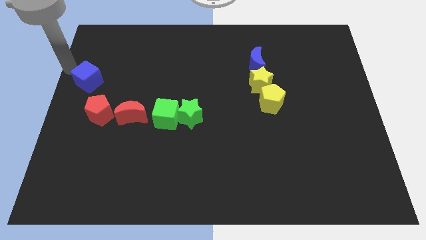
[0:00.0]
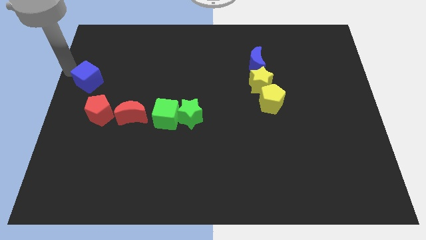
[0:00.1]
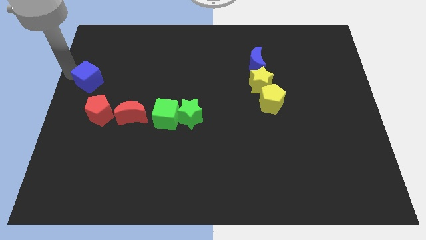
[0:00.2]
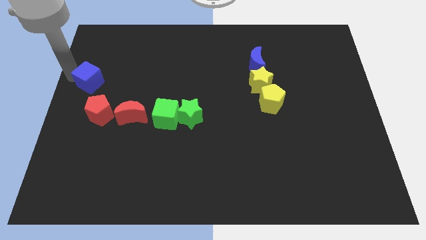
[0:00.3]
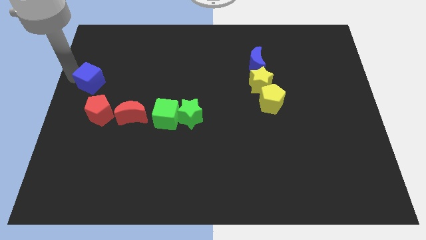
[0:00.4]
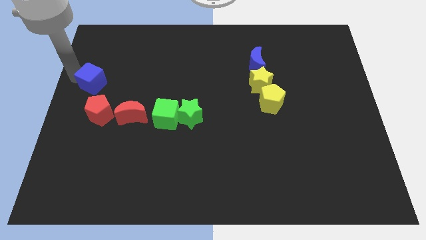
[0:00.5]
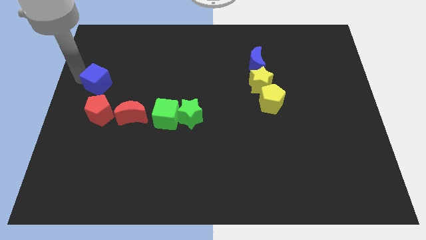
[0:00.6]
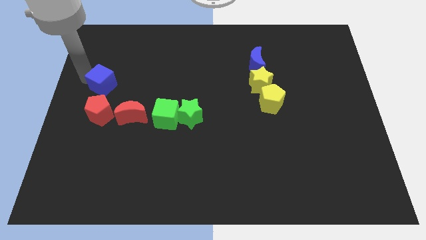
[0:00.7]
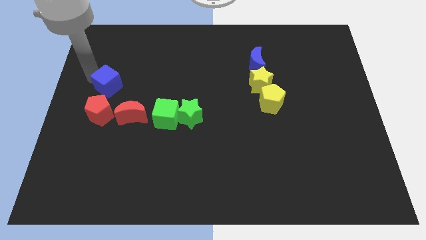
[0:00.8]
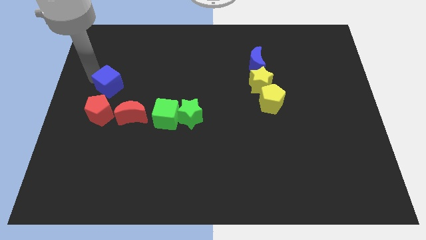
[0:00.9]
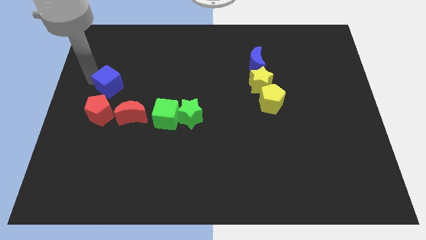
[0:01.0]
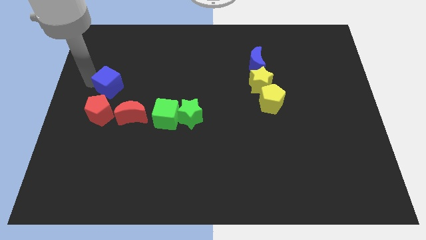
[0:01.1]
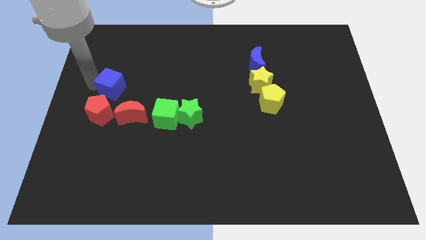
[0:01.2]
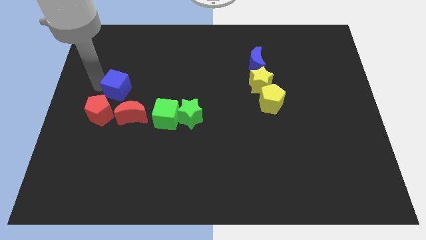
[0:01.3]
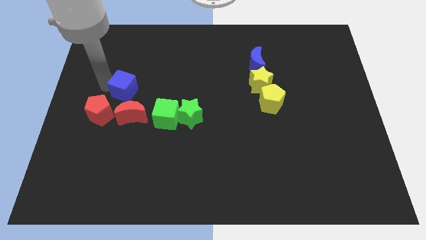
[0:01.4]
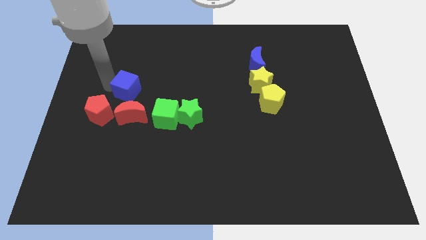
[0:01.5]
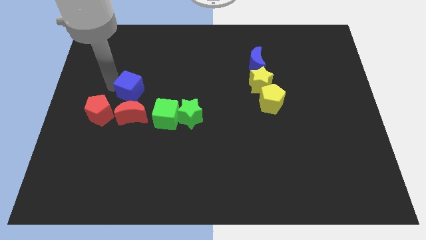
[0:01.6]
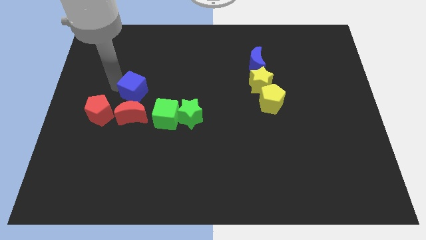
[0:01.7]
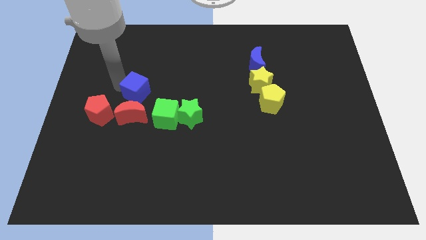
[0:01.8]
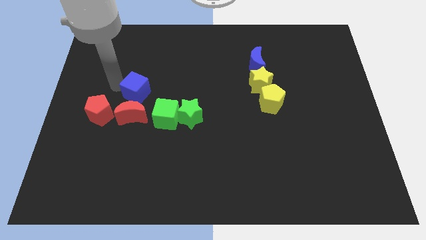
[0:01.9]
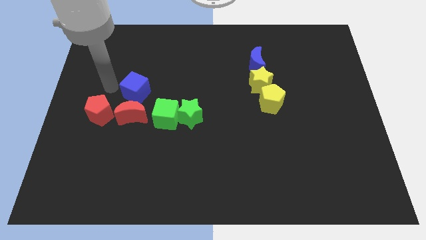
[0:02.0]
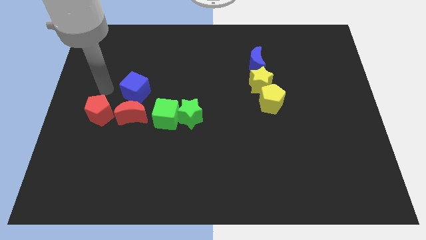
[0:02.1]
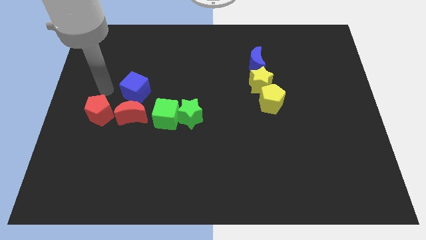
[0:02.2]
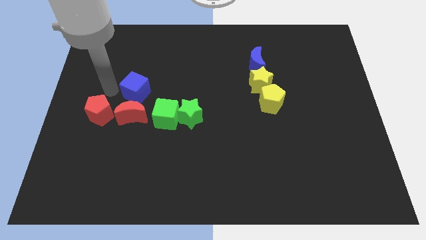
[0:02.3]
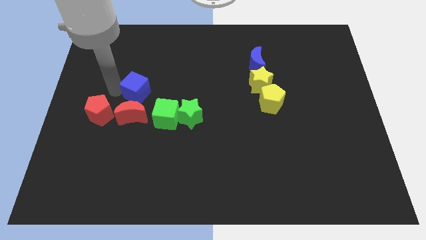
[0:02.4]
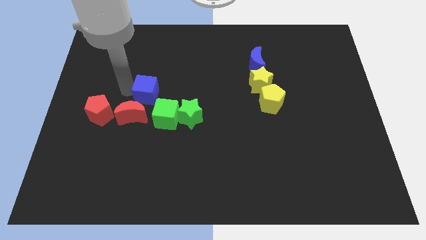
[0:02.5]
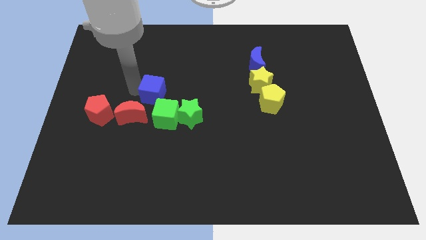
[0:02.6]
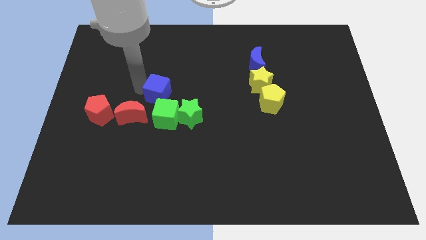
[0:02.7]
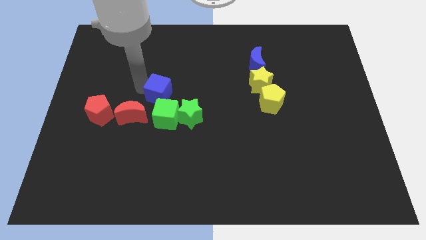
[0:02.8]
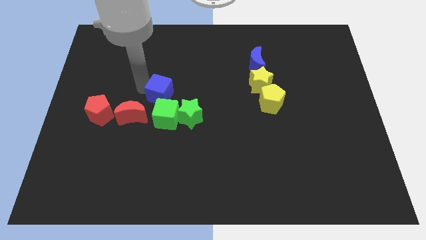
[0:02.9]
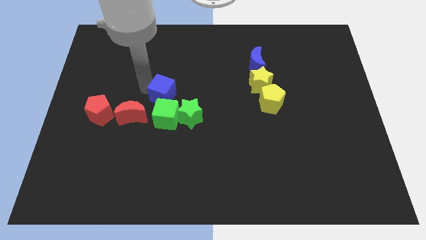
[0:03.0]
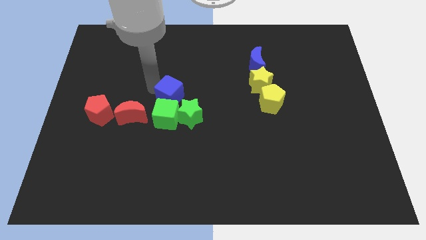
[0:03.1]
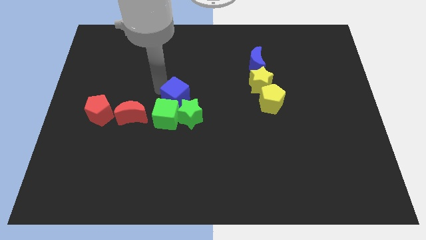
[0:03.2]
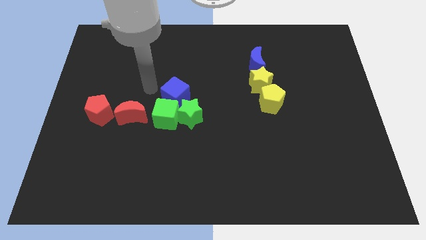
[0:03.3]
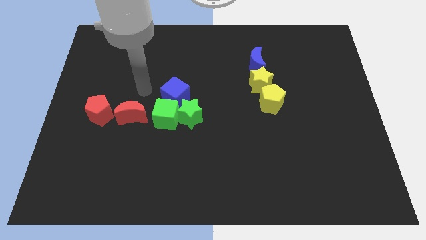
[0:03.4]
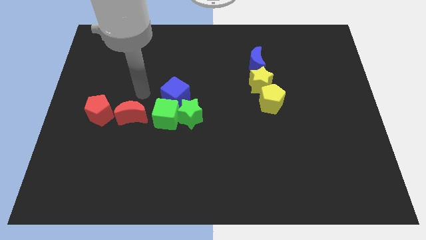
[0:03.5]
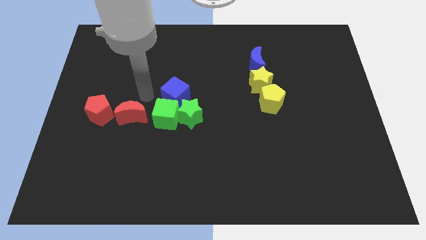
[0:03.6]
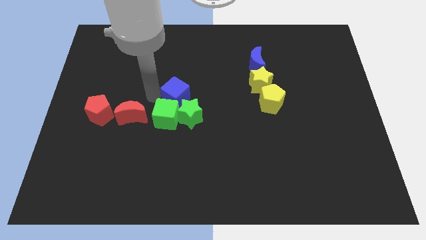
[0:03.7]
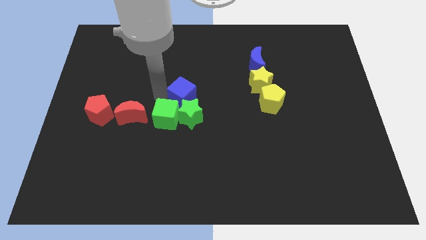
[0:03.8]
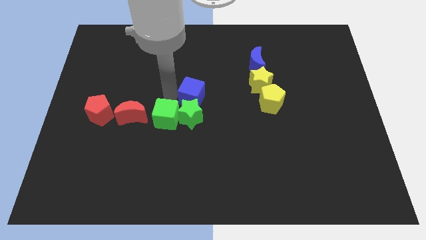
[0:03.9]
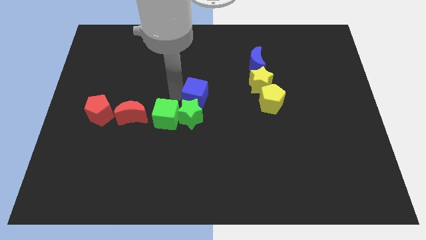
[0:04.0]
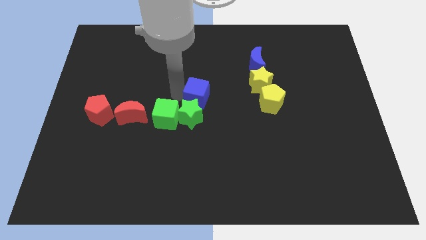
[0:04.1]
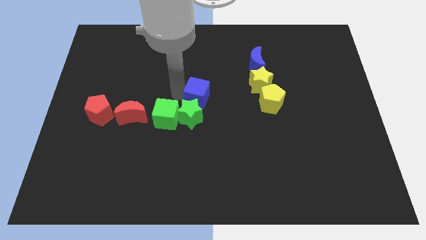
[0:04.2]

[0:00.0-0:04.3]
place the blue cube above the green star

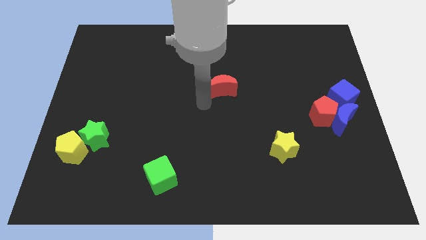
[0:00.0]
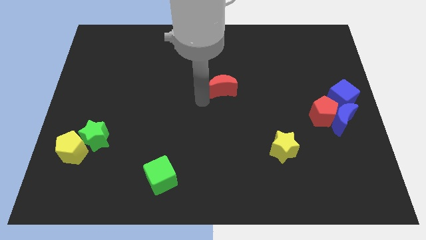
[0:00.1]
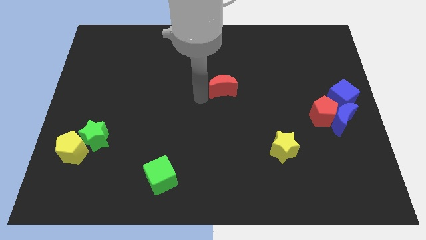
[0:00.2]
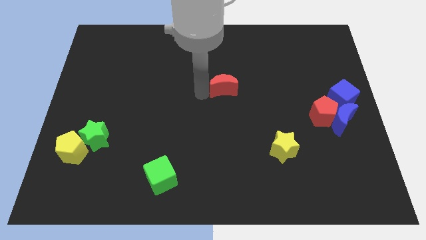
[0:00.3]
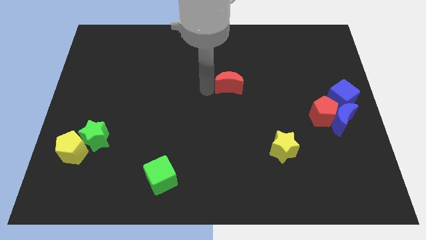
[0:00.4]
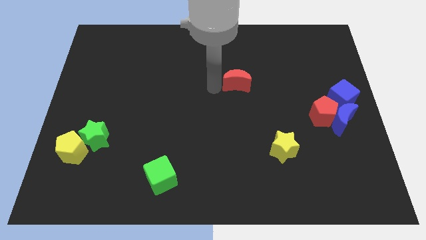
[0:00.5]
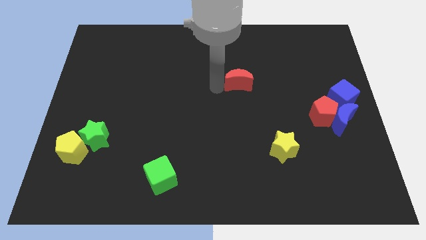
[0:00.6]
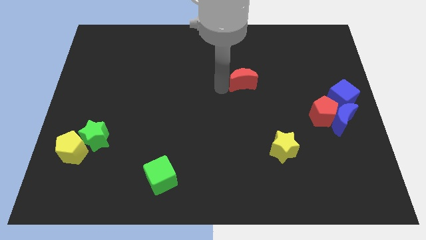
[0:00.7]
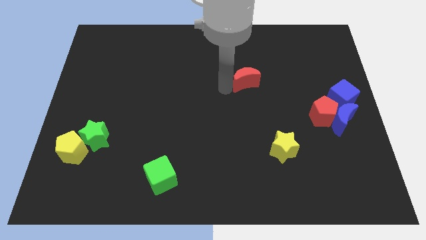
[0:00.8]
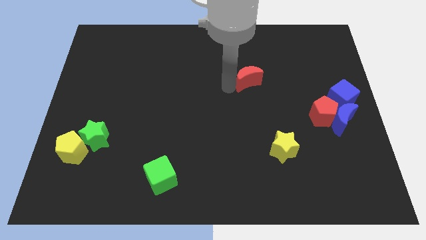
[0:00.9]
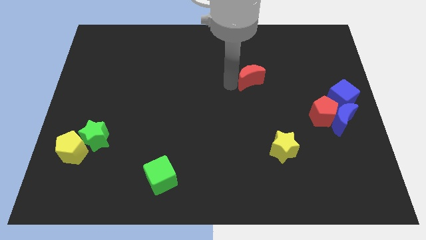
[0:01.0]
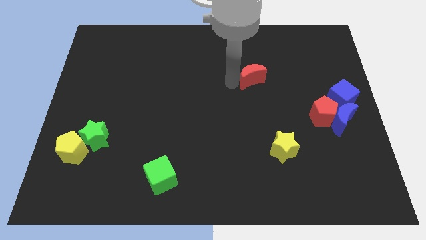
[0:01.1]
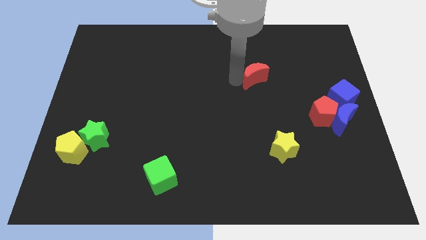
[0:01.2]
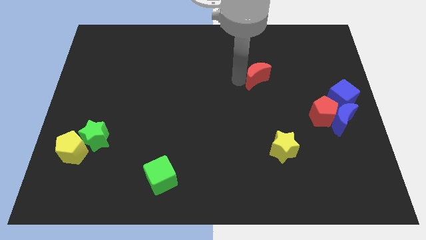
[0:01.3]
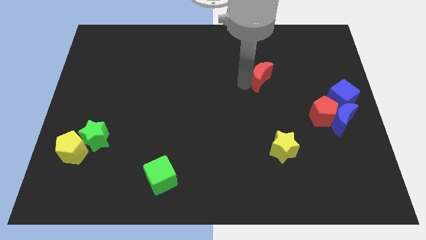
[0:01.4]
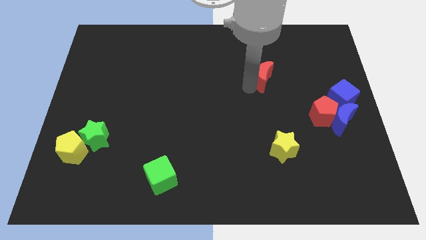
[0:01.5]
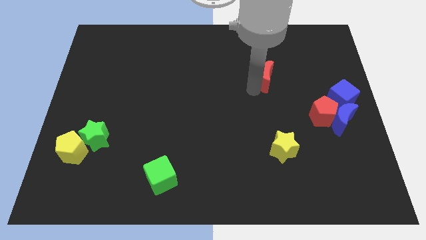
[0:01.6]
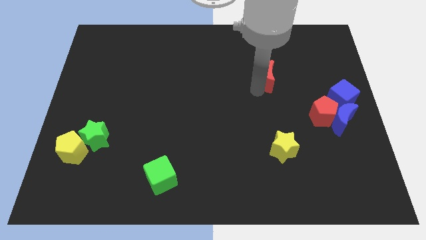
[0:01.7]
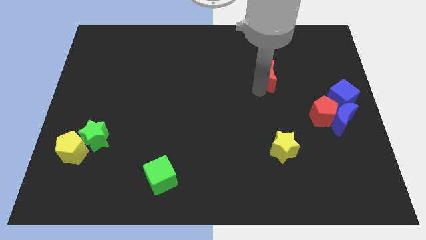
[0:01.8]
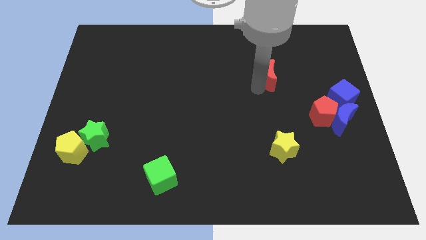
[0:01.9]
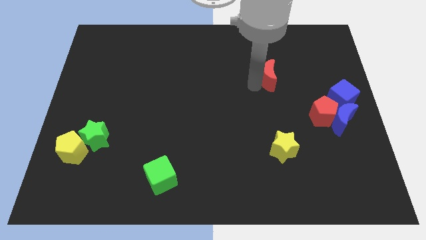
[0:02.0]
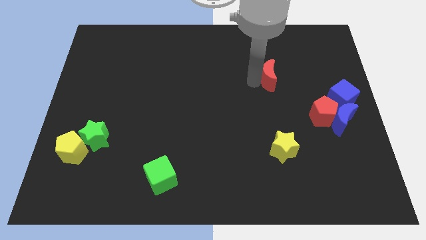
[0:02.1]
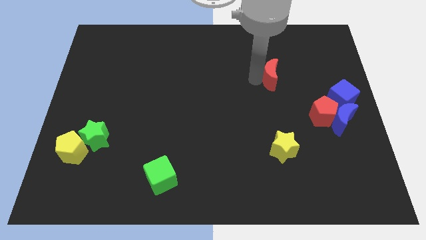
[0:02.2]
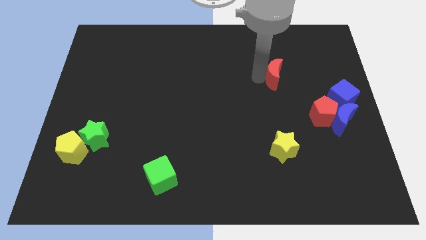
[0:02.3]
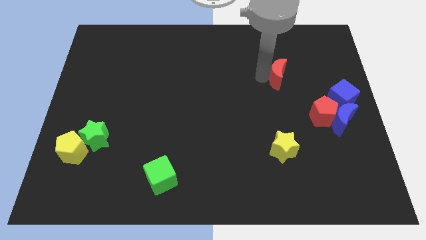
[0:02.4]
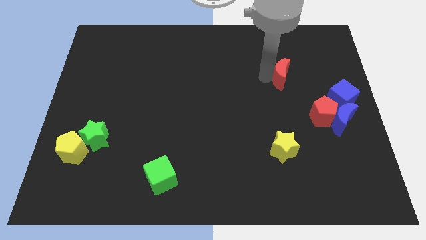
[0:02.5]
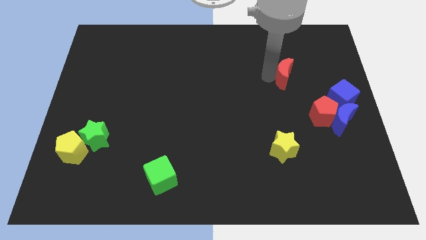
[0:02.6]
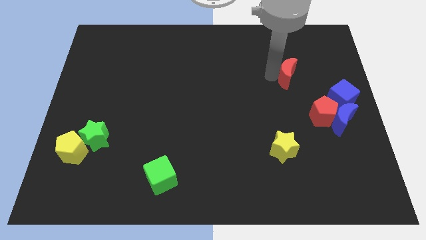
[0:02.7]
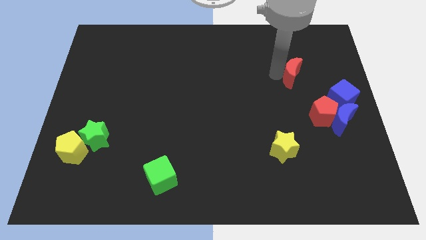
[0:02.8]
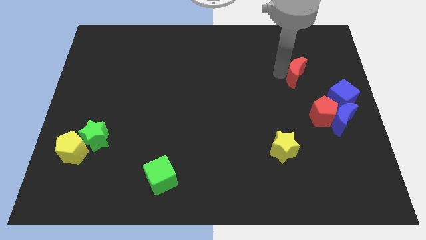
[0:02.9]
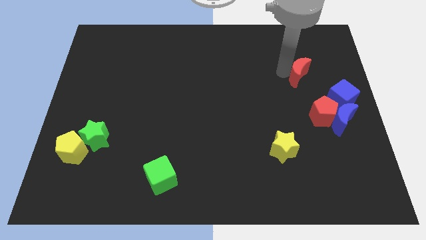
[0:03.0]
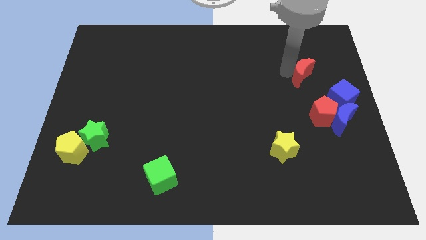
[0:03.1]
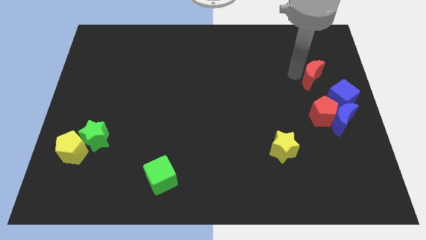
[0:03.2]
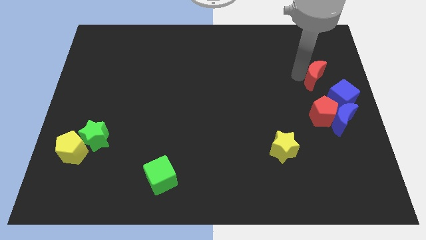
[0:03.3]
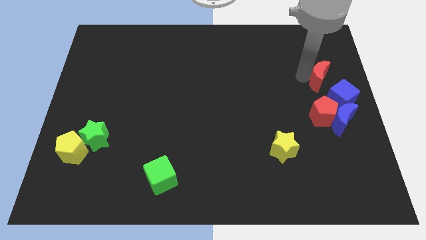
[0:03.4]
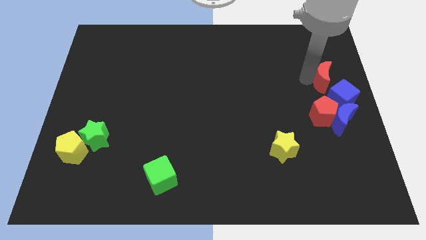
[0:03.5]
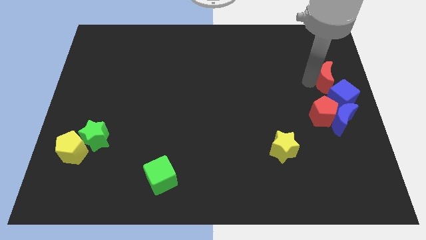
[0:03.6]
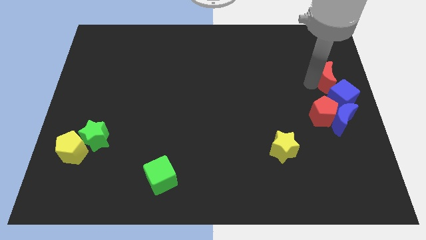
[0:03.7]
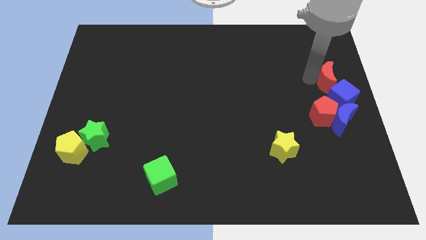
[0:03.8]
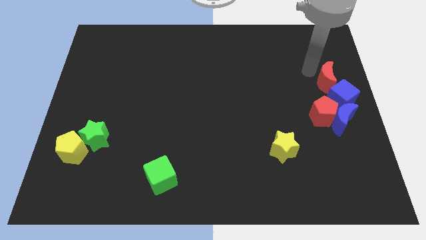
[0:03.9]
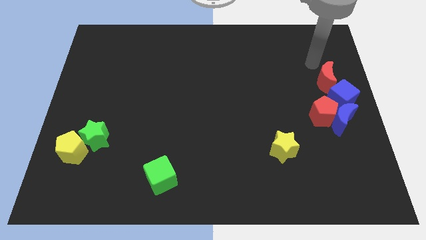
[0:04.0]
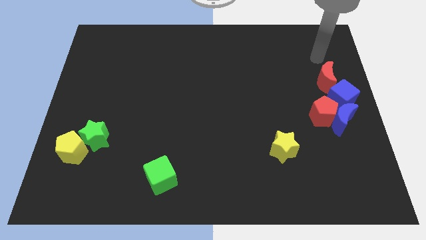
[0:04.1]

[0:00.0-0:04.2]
move red moon above red pentagon

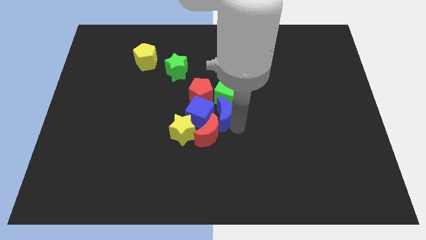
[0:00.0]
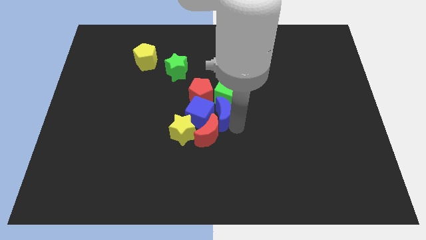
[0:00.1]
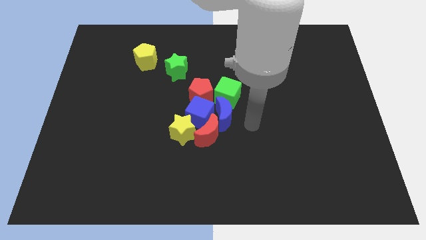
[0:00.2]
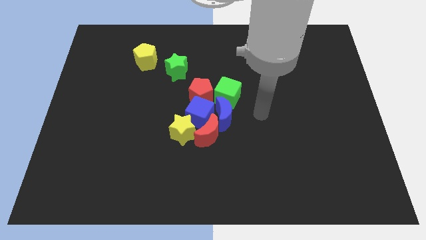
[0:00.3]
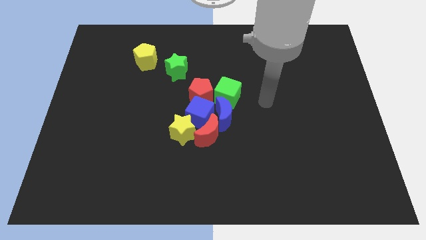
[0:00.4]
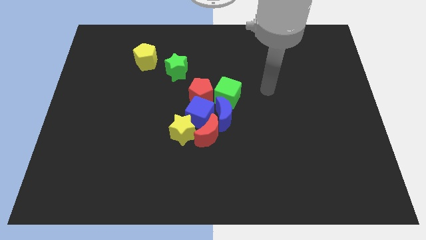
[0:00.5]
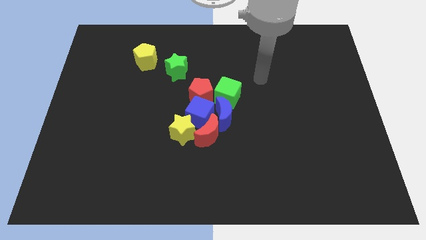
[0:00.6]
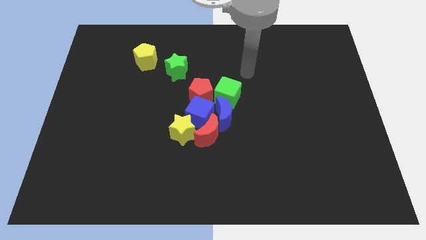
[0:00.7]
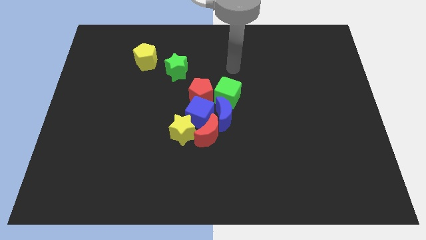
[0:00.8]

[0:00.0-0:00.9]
move your arm above the green cube
